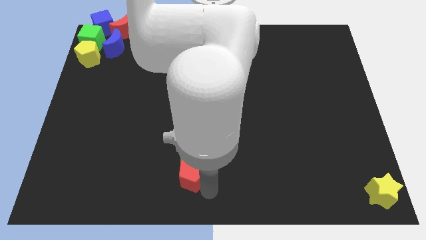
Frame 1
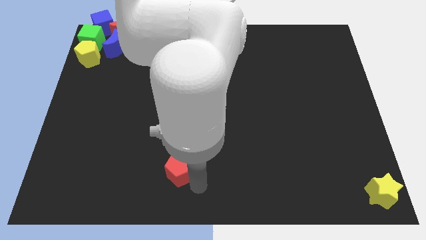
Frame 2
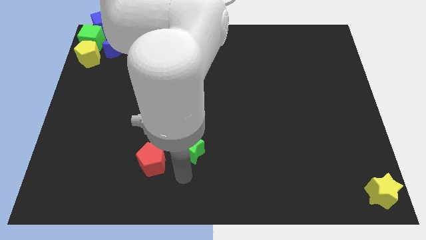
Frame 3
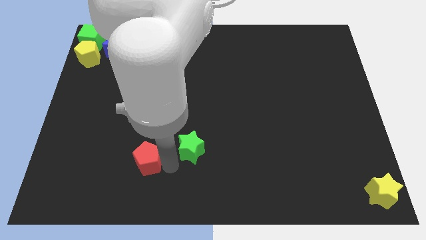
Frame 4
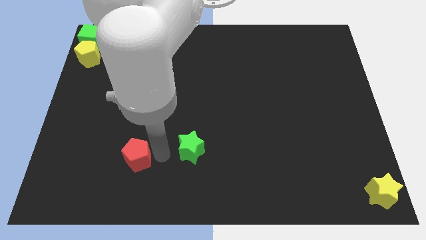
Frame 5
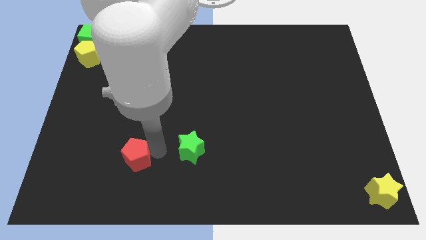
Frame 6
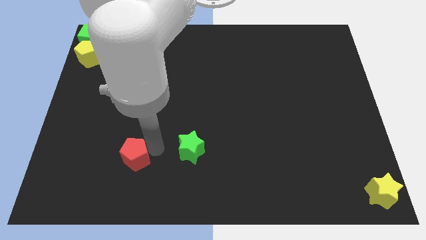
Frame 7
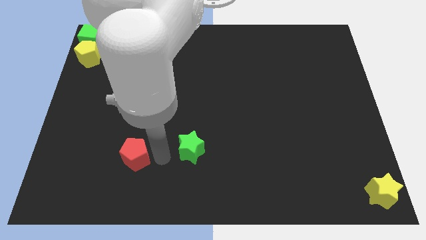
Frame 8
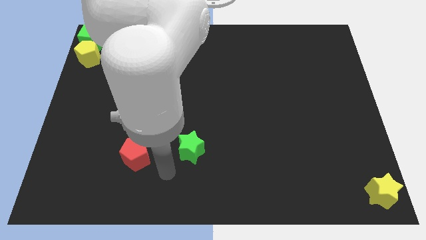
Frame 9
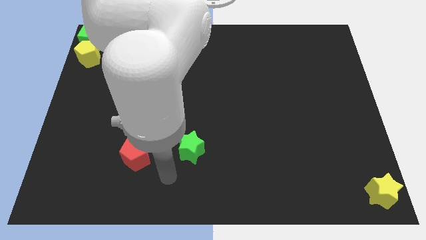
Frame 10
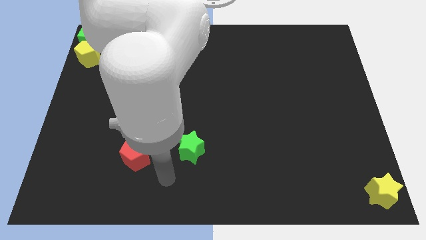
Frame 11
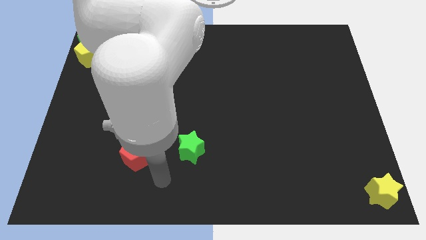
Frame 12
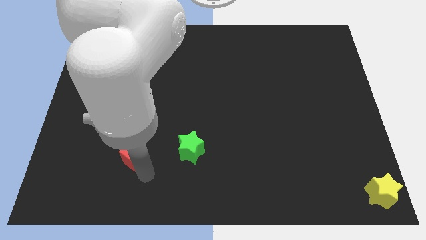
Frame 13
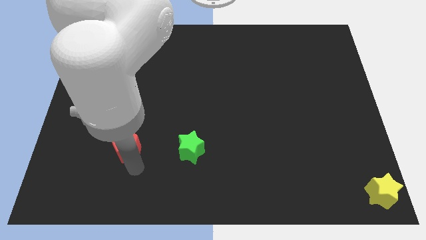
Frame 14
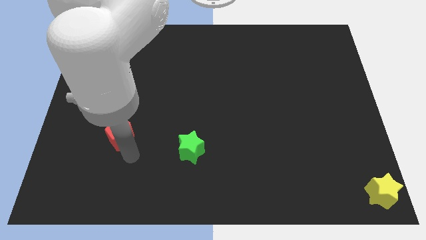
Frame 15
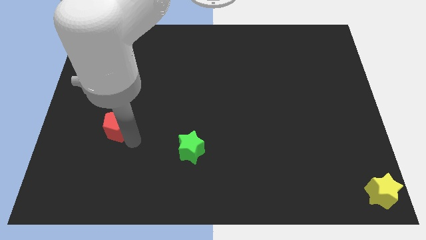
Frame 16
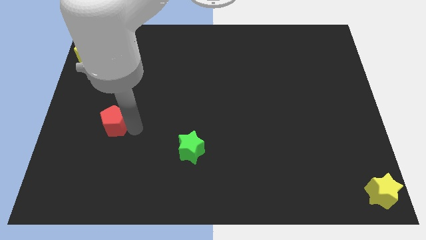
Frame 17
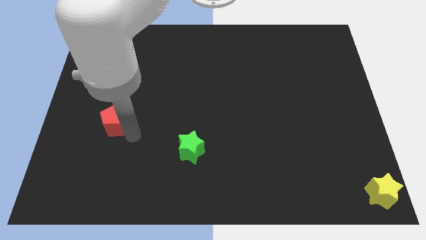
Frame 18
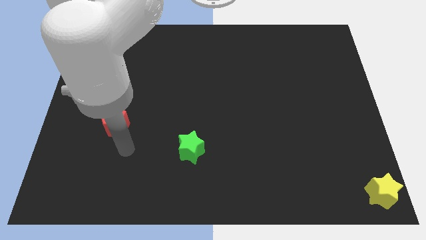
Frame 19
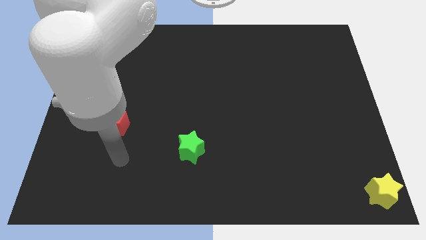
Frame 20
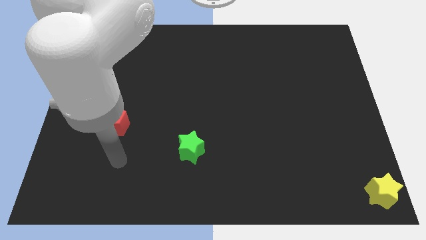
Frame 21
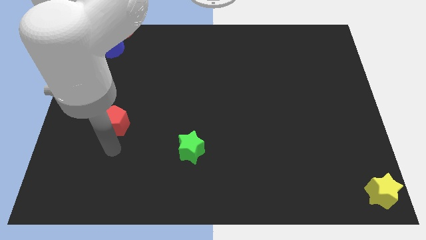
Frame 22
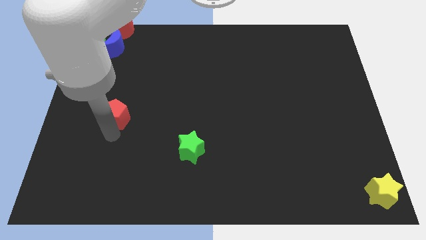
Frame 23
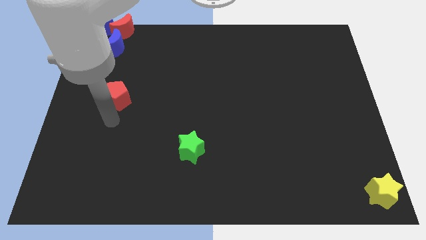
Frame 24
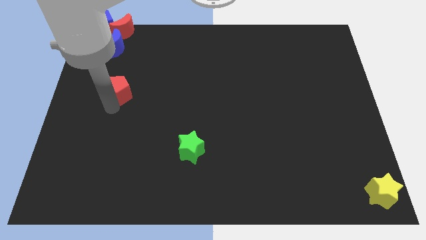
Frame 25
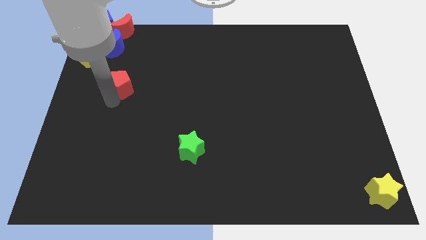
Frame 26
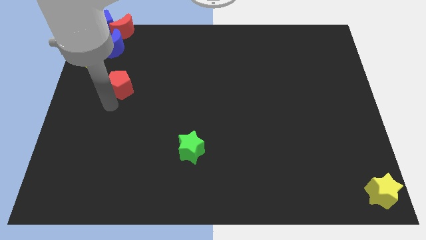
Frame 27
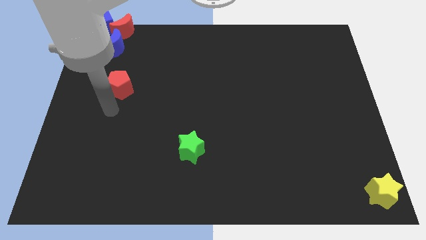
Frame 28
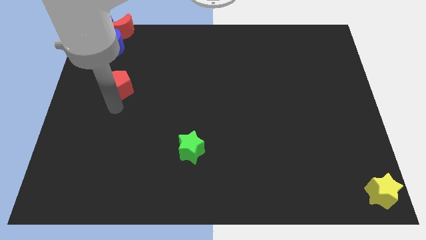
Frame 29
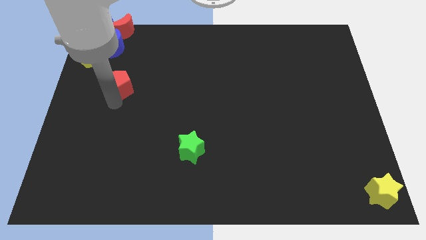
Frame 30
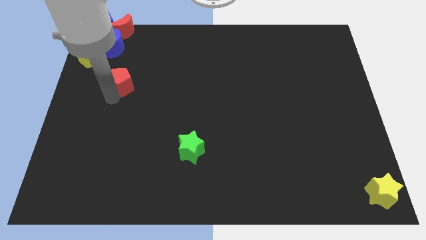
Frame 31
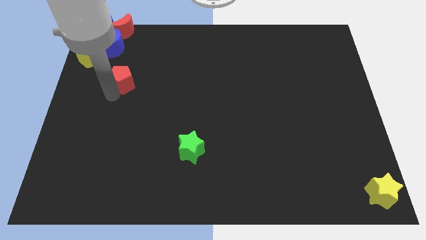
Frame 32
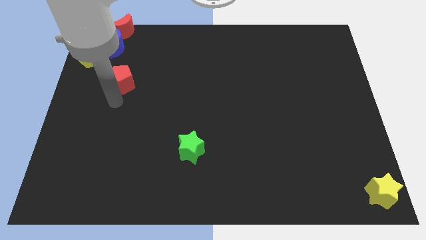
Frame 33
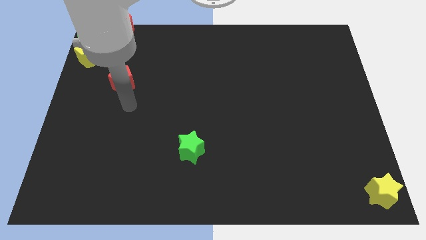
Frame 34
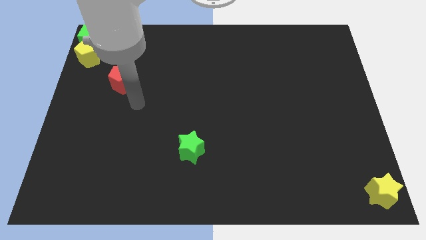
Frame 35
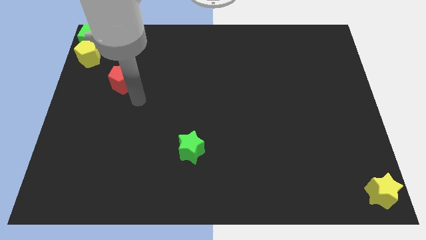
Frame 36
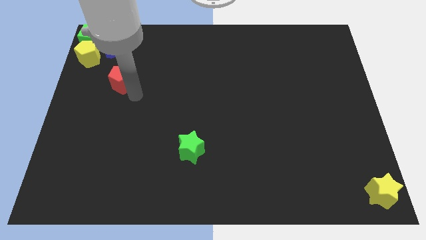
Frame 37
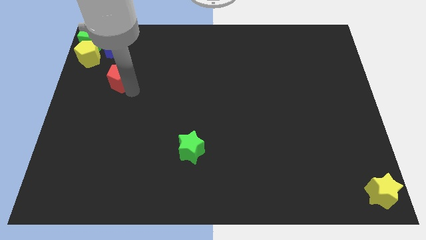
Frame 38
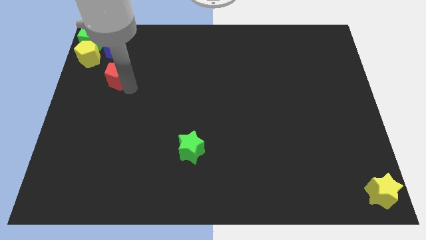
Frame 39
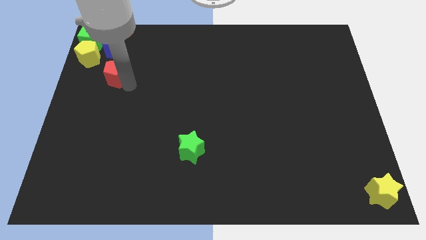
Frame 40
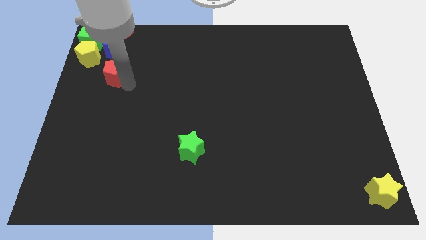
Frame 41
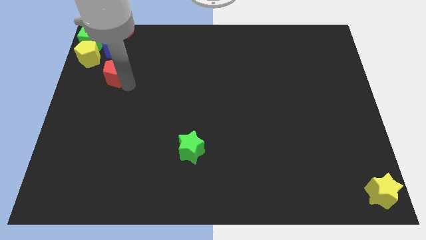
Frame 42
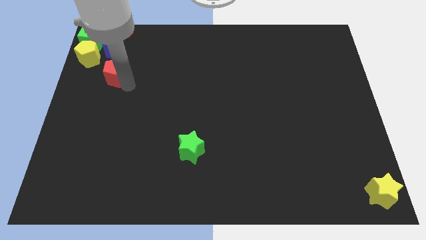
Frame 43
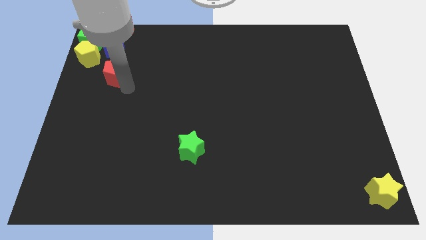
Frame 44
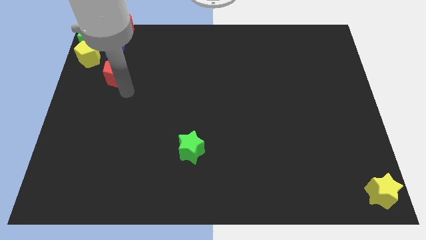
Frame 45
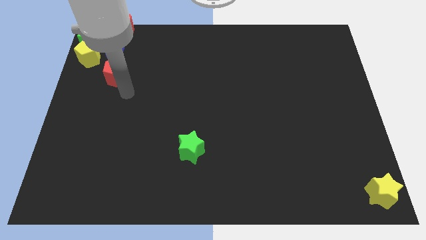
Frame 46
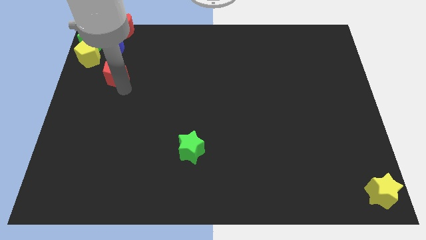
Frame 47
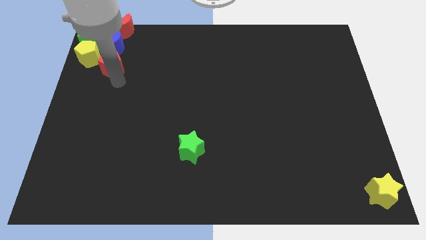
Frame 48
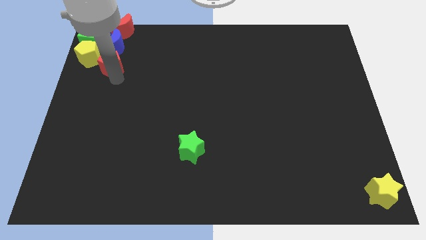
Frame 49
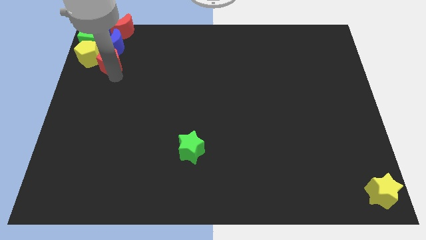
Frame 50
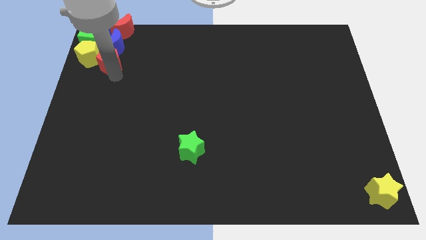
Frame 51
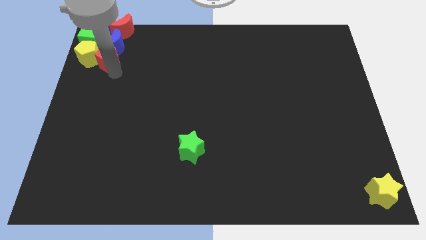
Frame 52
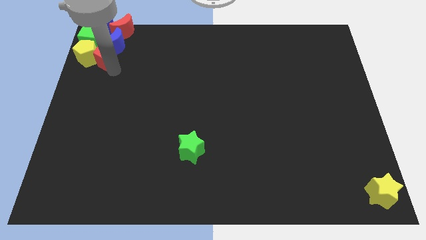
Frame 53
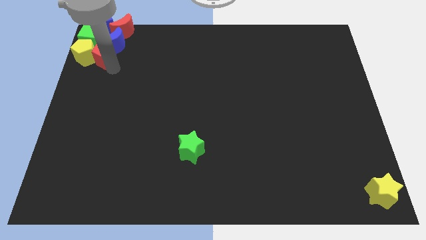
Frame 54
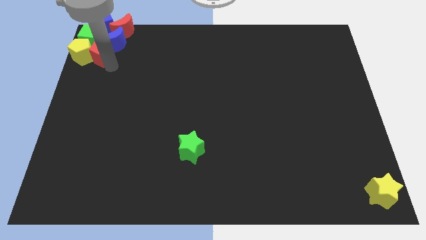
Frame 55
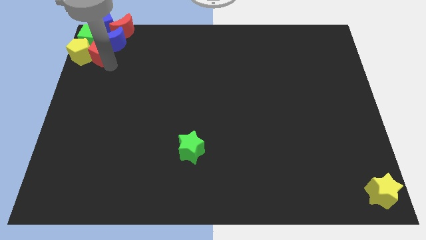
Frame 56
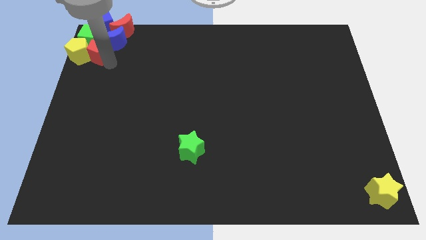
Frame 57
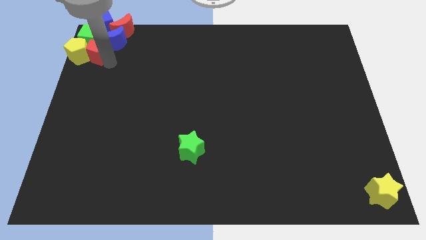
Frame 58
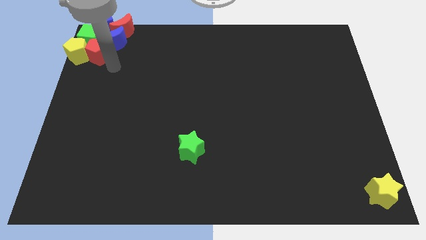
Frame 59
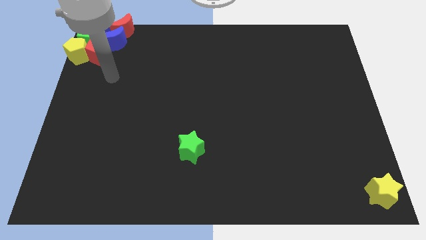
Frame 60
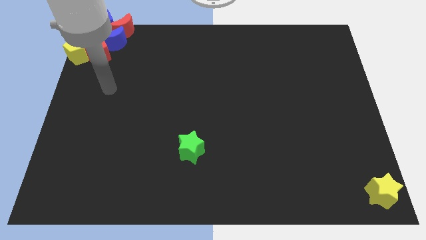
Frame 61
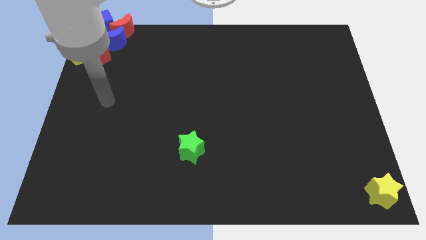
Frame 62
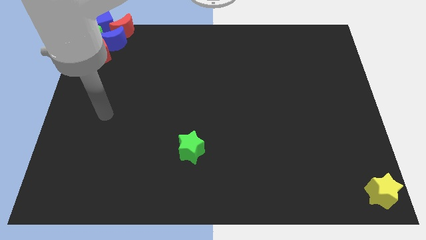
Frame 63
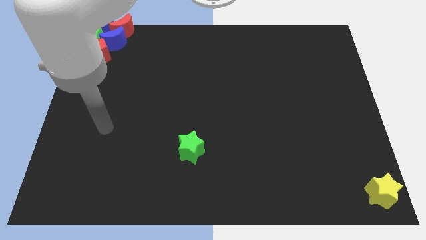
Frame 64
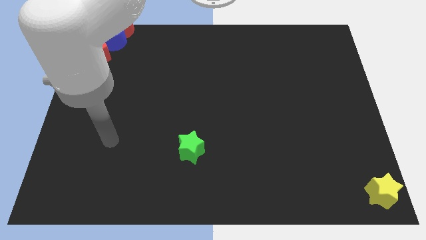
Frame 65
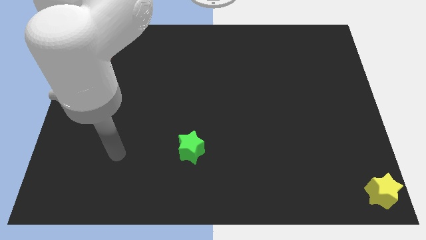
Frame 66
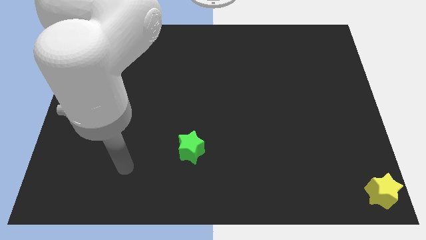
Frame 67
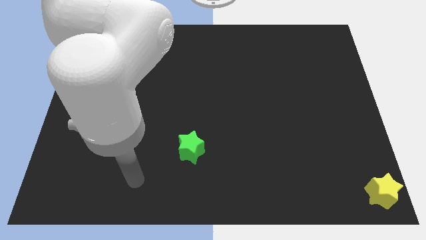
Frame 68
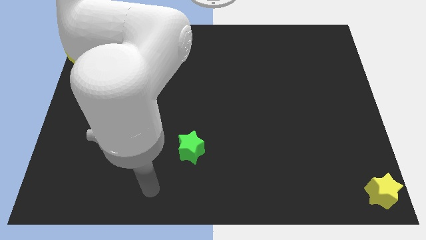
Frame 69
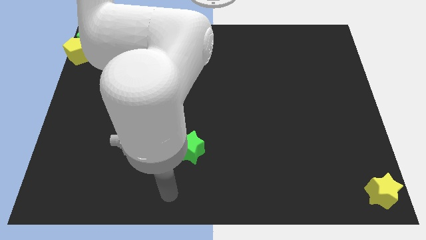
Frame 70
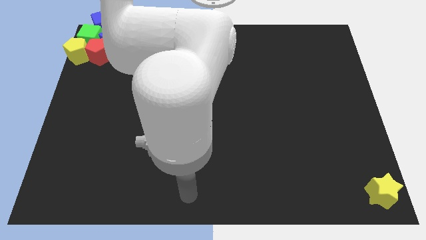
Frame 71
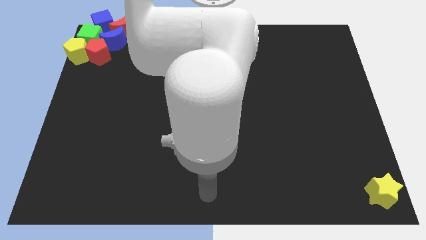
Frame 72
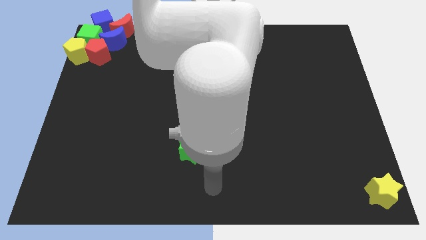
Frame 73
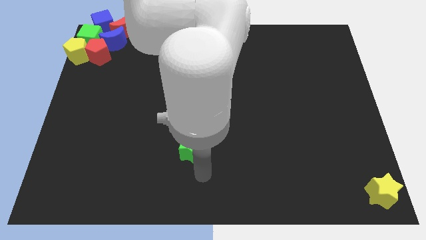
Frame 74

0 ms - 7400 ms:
place the red pentagon to the top left corner near the yelllow pentagon

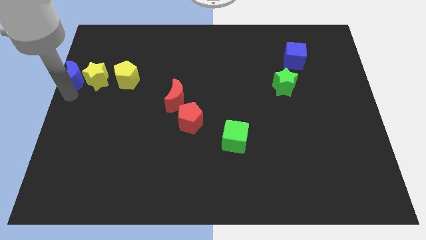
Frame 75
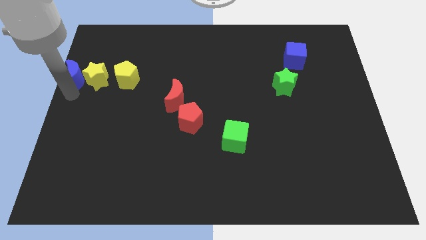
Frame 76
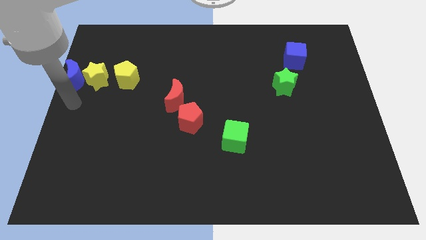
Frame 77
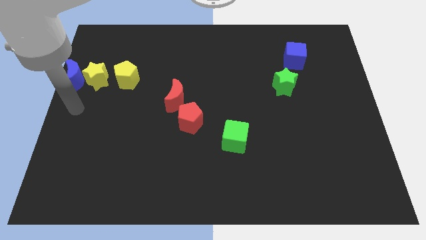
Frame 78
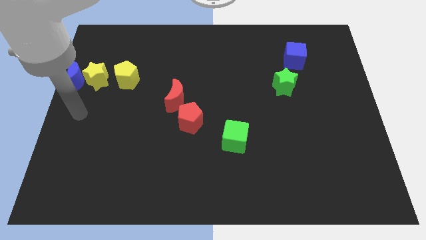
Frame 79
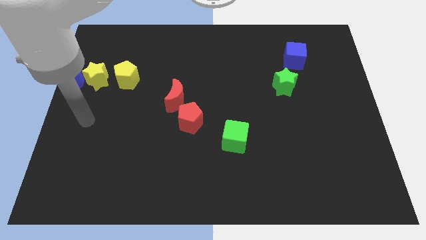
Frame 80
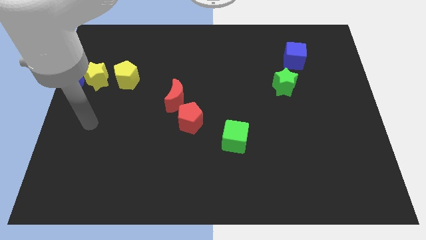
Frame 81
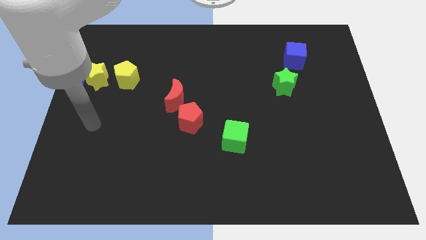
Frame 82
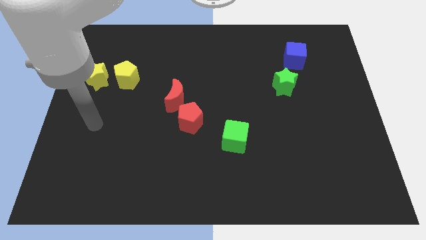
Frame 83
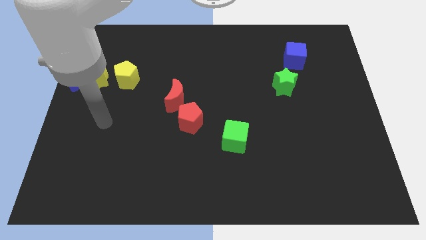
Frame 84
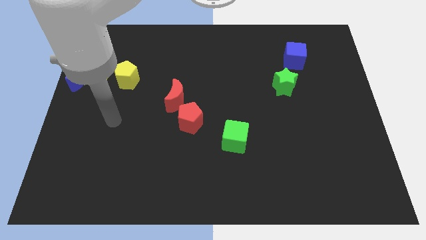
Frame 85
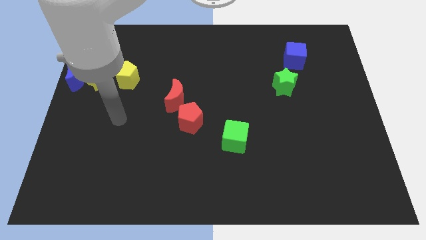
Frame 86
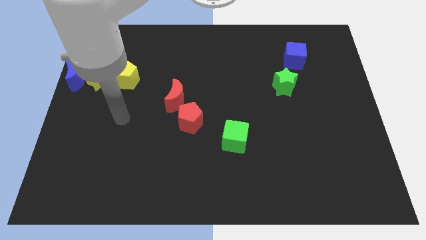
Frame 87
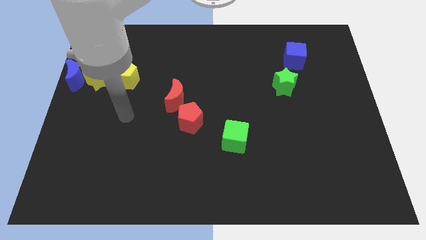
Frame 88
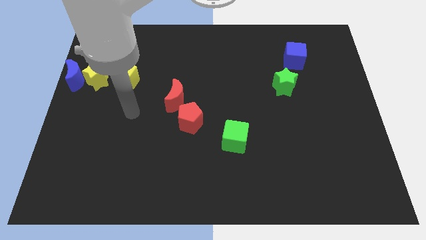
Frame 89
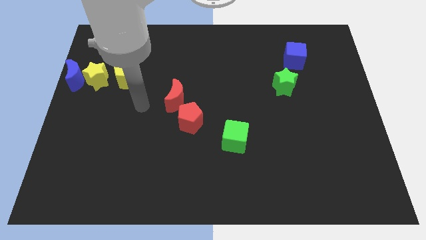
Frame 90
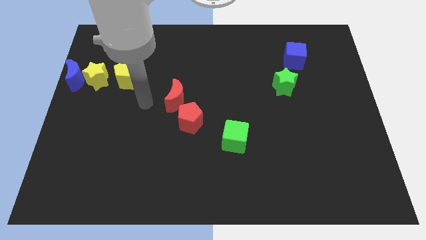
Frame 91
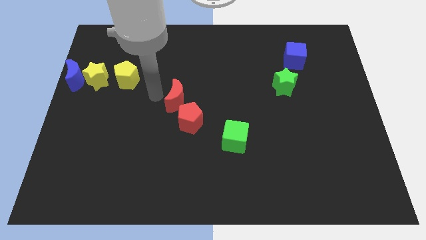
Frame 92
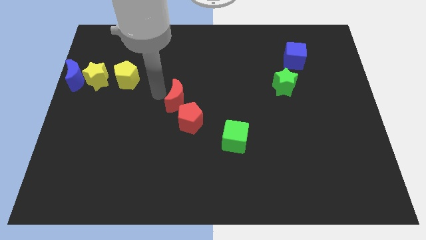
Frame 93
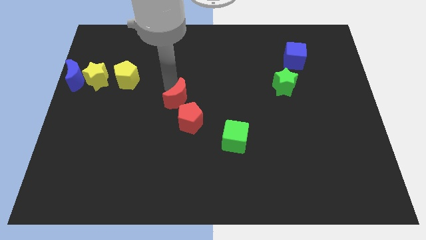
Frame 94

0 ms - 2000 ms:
move your hand to the left of the red moon
